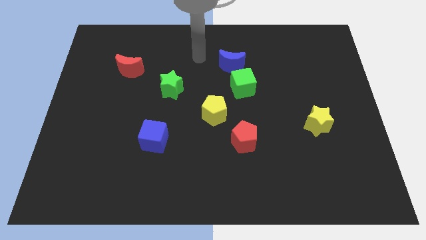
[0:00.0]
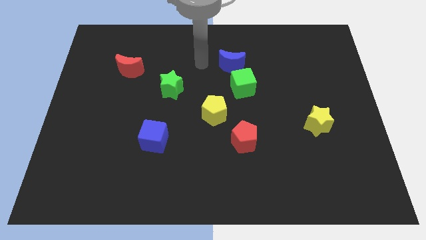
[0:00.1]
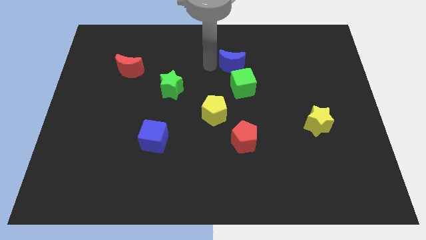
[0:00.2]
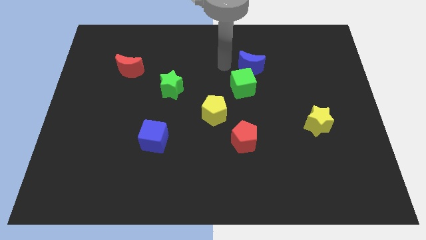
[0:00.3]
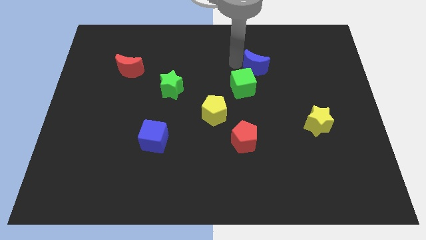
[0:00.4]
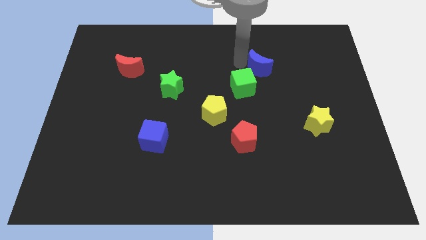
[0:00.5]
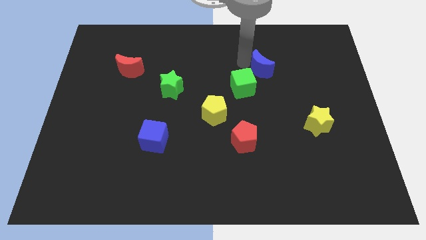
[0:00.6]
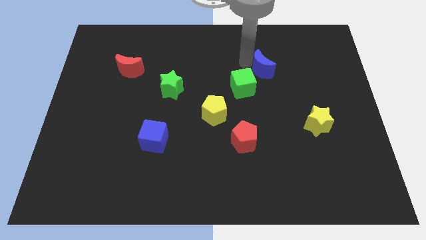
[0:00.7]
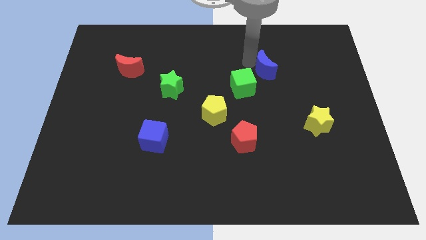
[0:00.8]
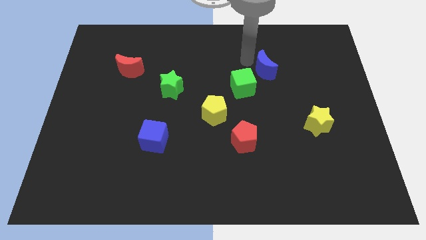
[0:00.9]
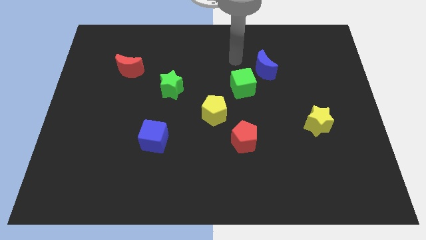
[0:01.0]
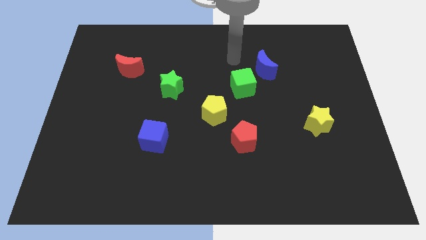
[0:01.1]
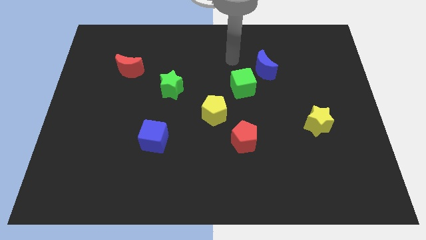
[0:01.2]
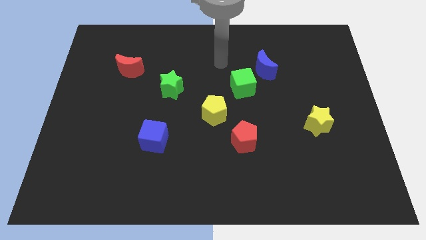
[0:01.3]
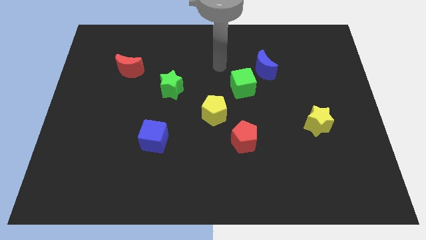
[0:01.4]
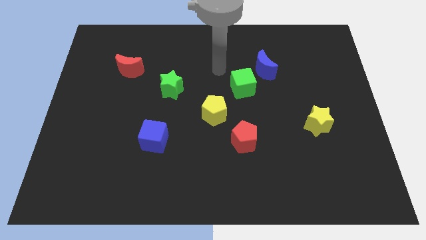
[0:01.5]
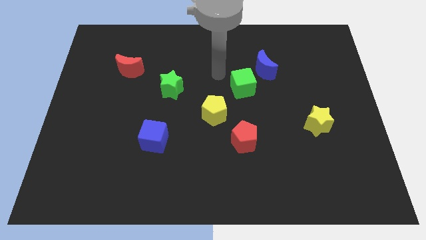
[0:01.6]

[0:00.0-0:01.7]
move the blue crescent to the top right side of the green cube

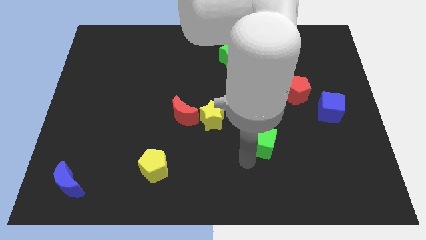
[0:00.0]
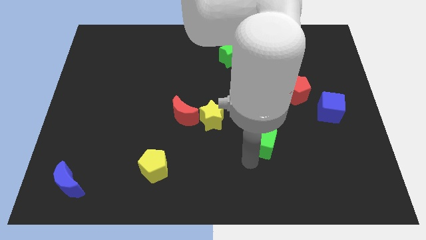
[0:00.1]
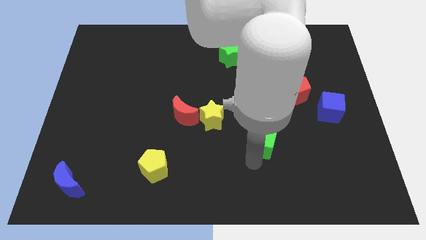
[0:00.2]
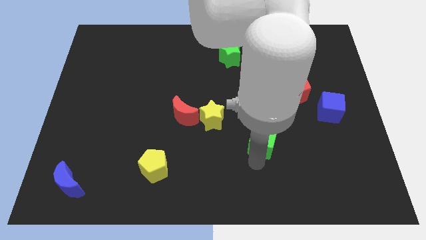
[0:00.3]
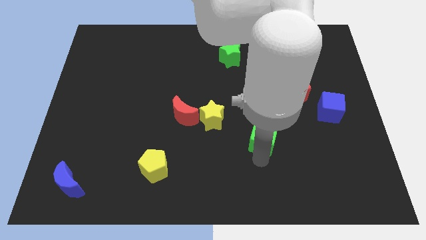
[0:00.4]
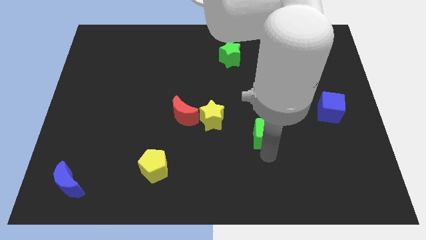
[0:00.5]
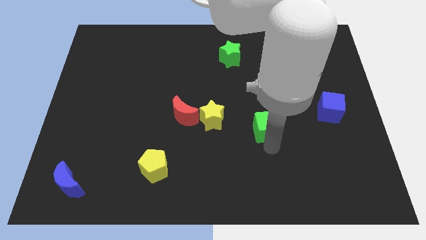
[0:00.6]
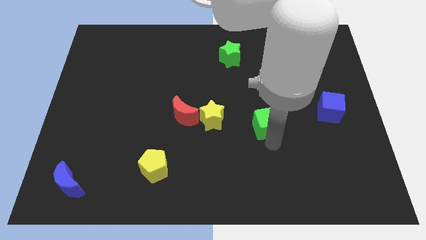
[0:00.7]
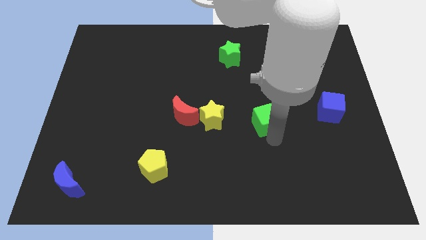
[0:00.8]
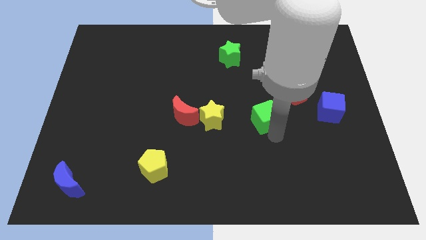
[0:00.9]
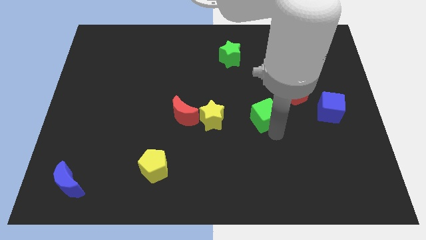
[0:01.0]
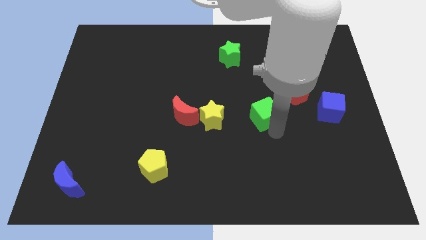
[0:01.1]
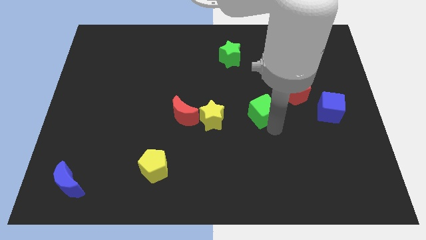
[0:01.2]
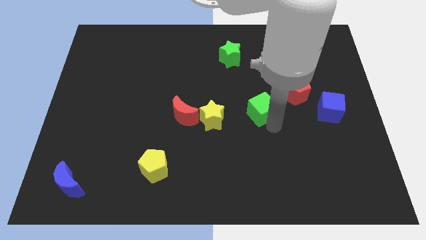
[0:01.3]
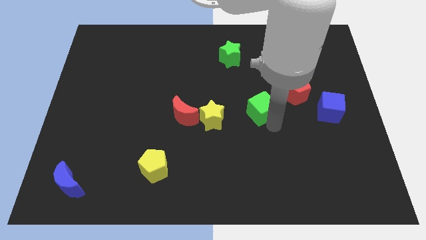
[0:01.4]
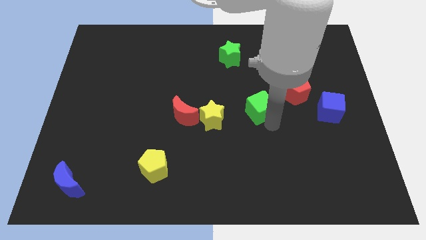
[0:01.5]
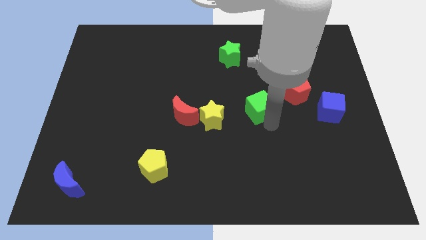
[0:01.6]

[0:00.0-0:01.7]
push the green cube towards up a bit

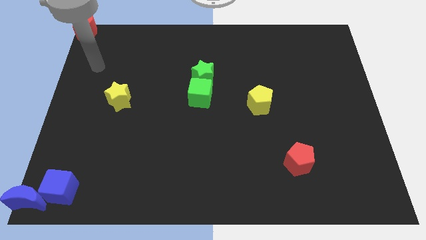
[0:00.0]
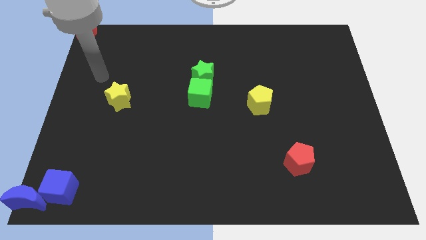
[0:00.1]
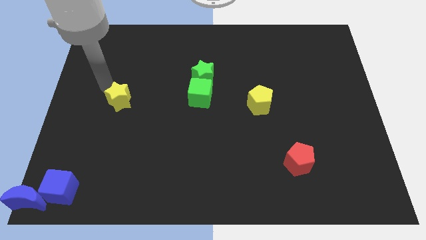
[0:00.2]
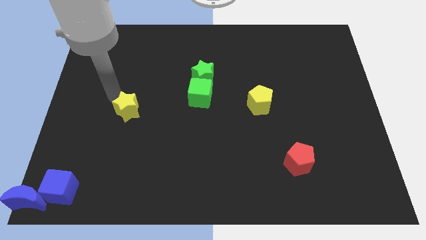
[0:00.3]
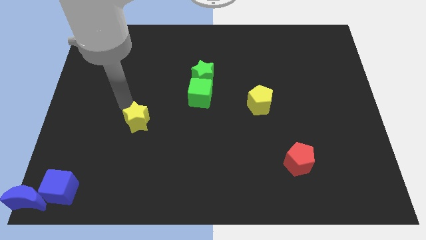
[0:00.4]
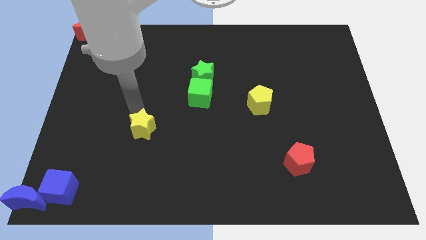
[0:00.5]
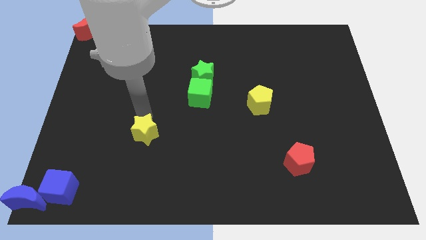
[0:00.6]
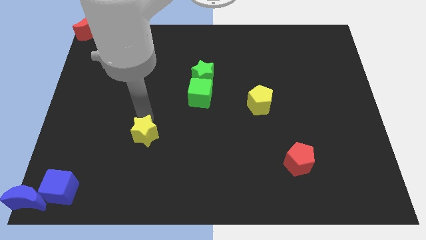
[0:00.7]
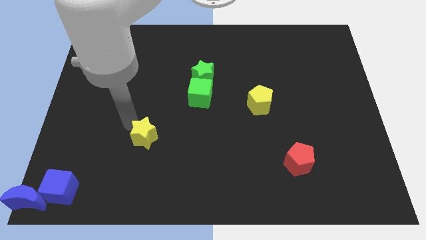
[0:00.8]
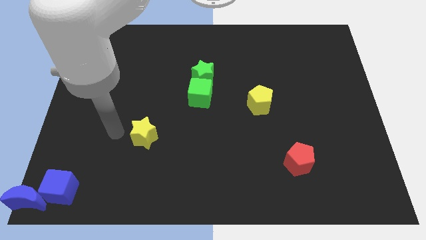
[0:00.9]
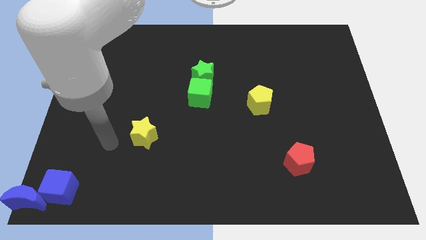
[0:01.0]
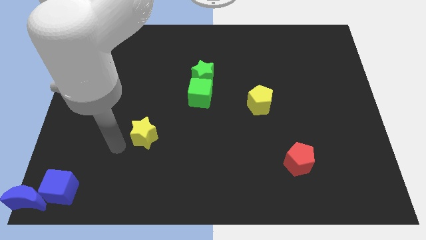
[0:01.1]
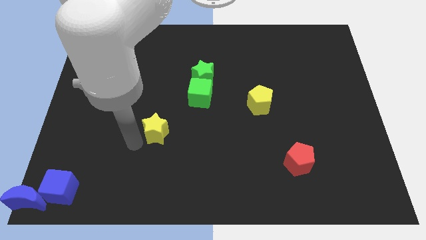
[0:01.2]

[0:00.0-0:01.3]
move the yellow star diagonally in between the group of blue and green blocks

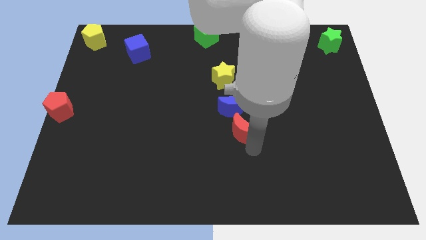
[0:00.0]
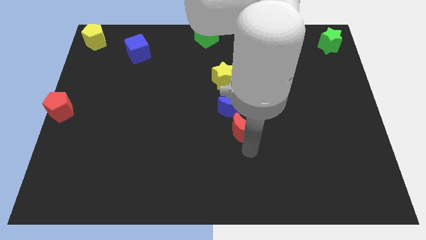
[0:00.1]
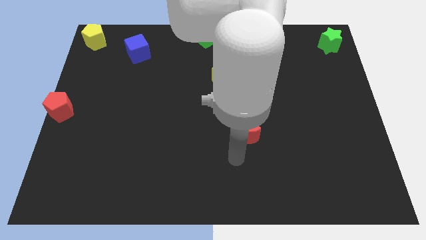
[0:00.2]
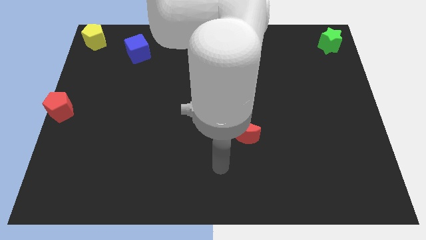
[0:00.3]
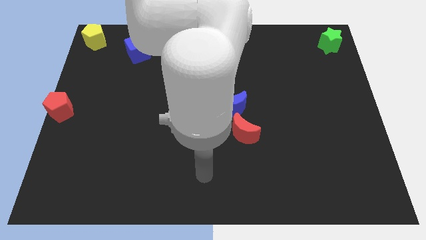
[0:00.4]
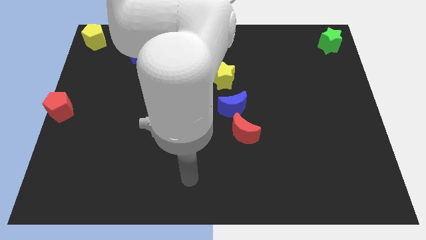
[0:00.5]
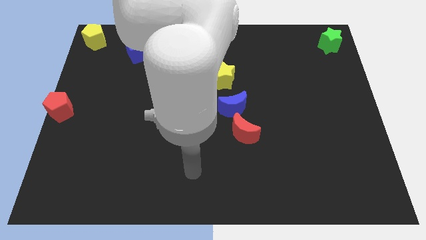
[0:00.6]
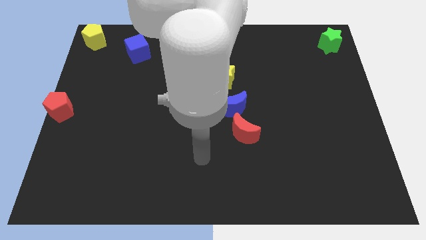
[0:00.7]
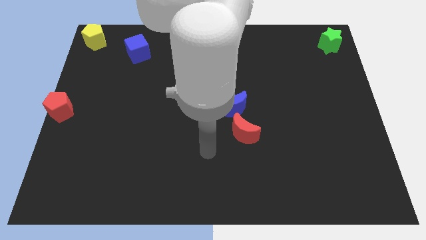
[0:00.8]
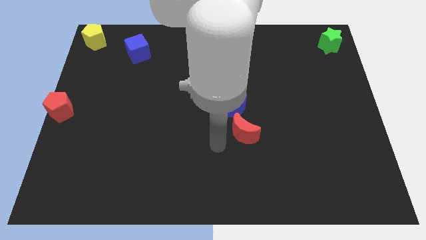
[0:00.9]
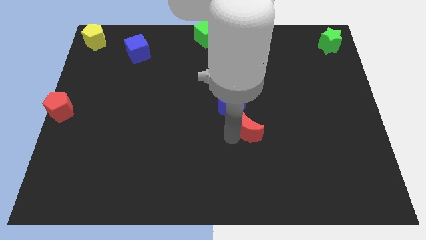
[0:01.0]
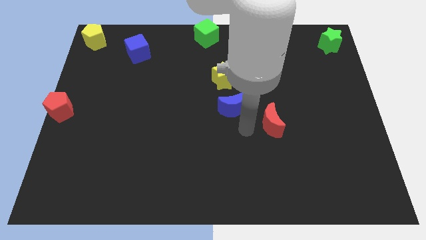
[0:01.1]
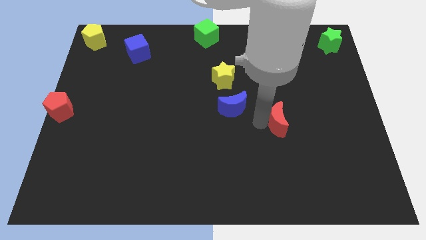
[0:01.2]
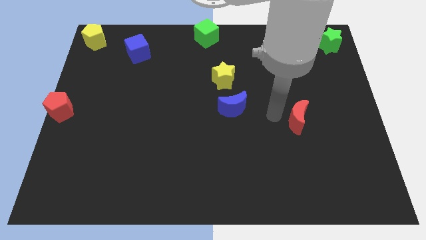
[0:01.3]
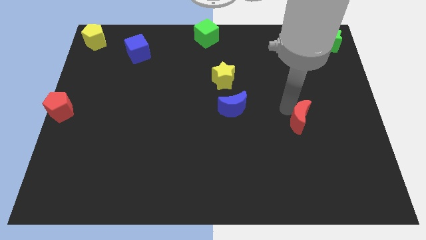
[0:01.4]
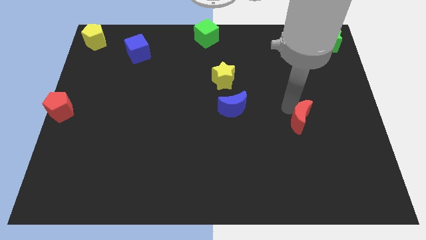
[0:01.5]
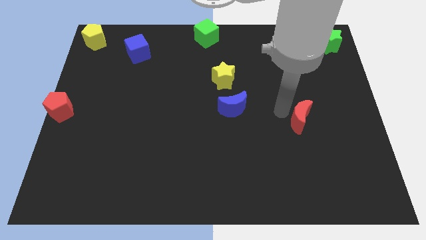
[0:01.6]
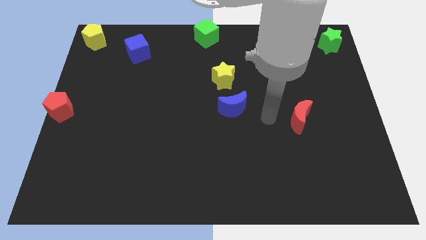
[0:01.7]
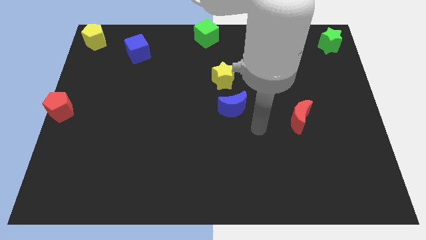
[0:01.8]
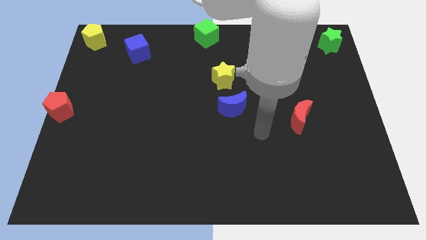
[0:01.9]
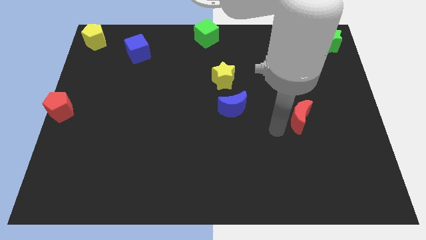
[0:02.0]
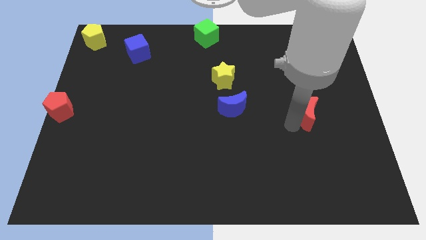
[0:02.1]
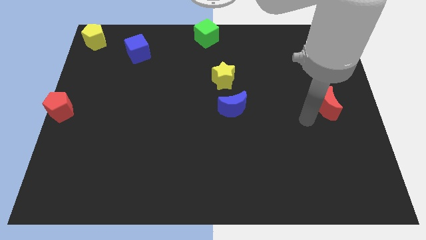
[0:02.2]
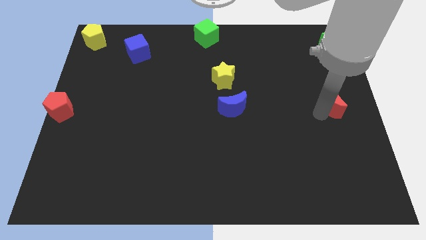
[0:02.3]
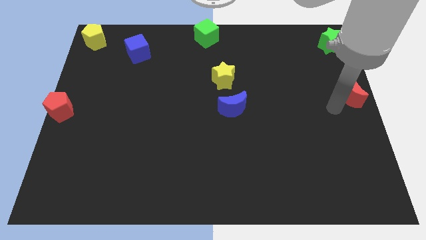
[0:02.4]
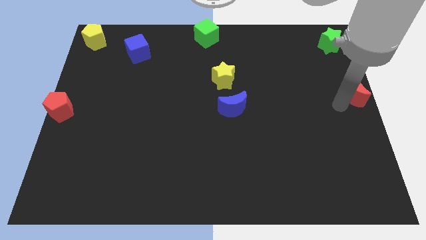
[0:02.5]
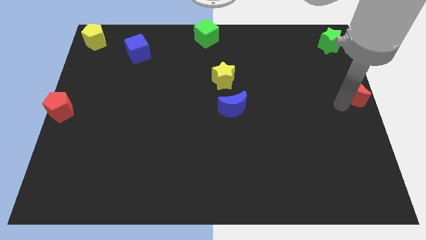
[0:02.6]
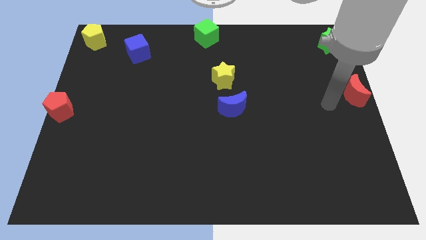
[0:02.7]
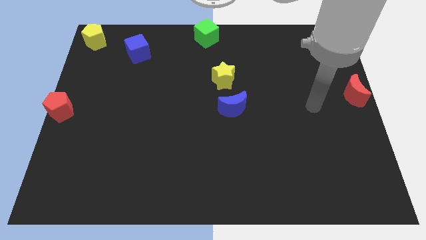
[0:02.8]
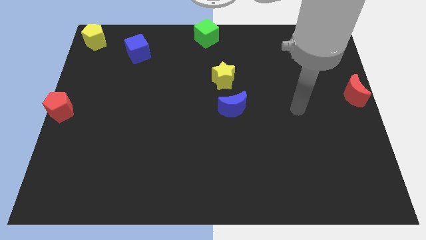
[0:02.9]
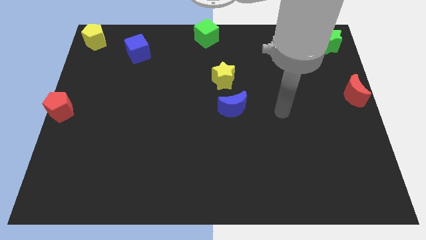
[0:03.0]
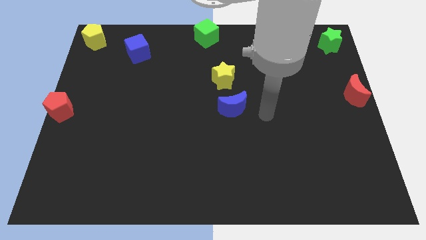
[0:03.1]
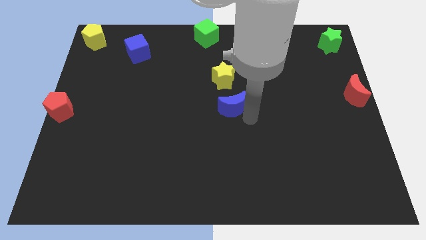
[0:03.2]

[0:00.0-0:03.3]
slide the red moon to the center right

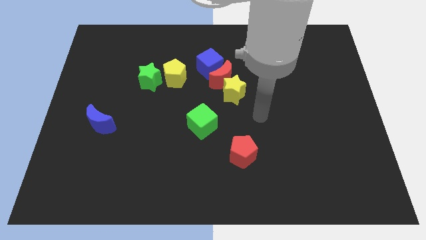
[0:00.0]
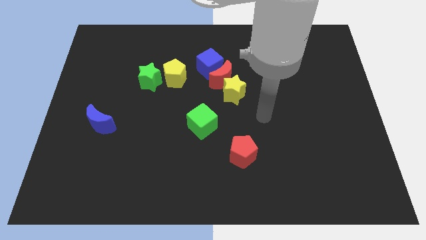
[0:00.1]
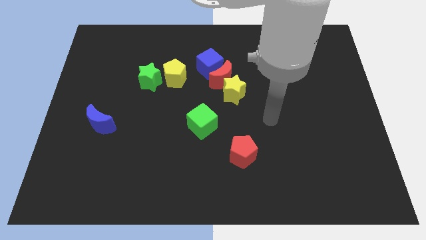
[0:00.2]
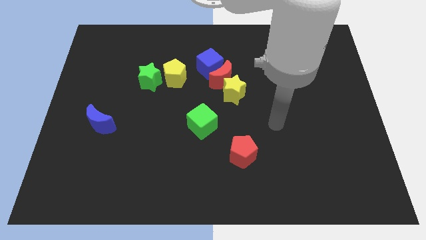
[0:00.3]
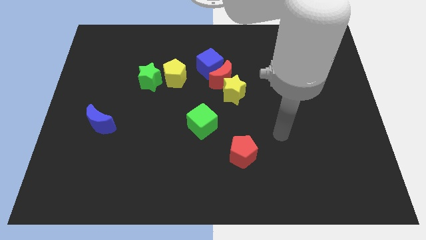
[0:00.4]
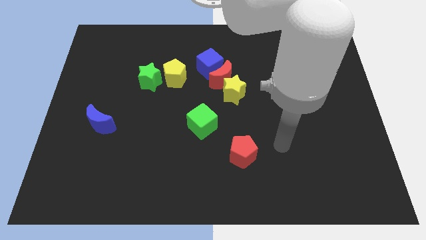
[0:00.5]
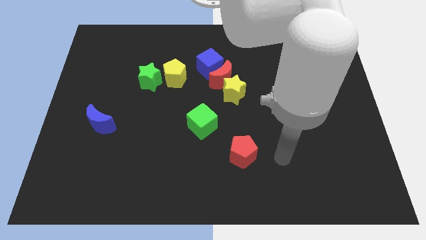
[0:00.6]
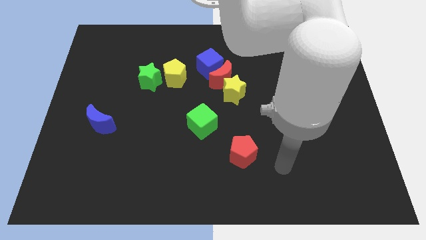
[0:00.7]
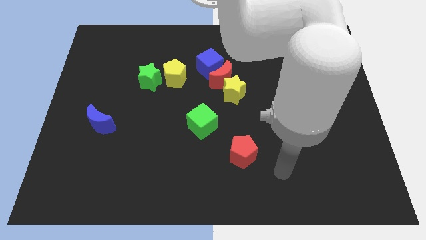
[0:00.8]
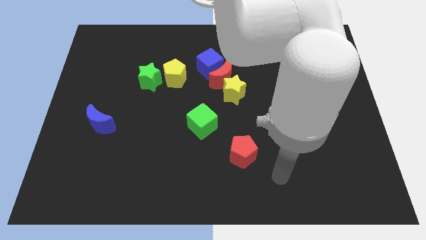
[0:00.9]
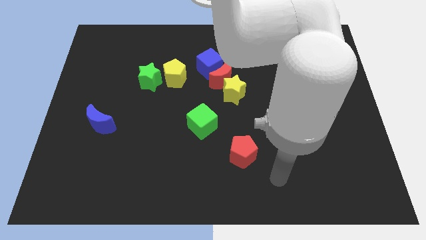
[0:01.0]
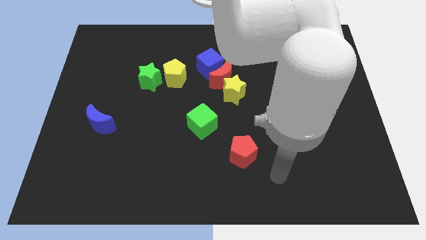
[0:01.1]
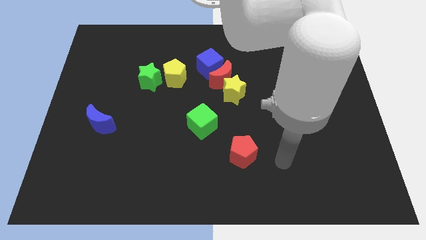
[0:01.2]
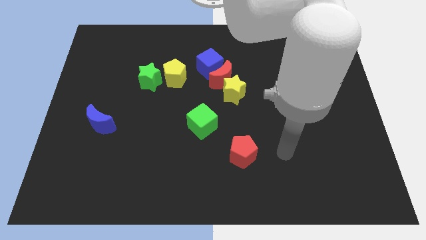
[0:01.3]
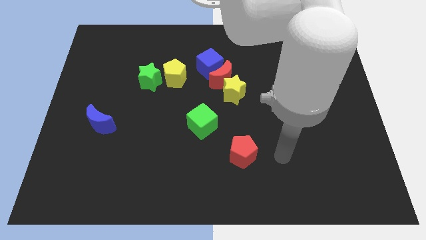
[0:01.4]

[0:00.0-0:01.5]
move your arm to the right of the red pentagon
